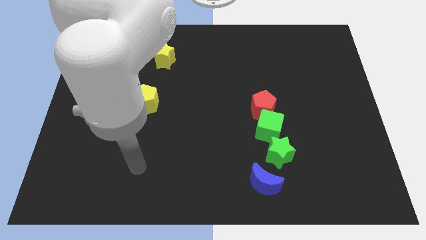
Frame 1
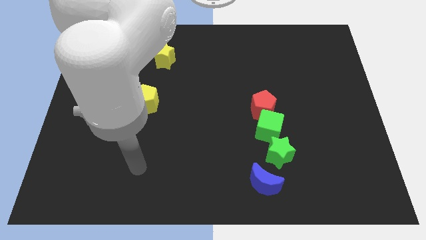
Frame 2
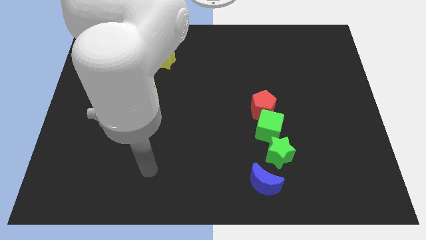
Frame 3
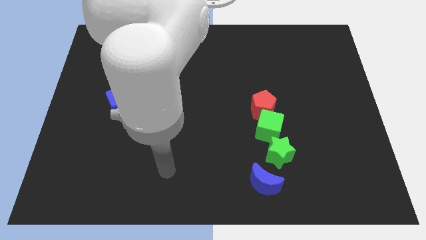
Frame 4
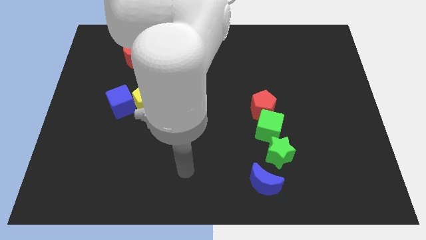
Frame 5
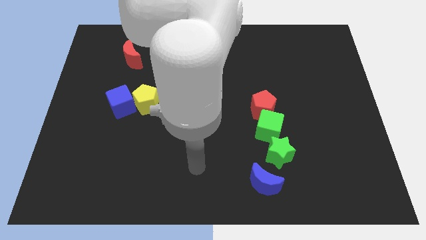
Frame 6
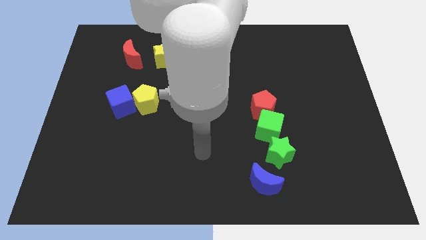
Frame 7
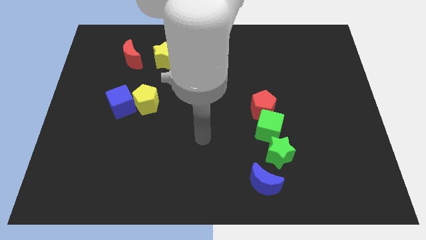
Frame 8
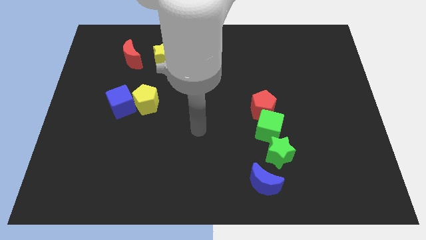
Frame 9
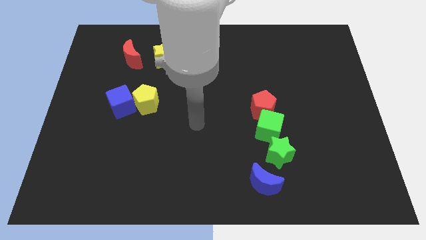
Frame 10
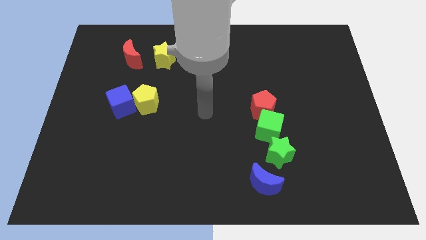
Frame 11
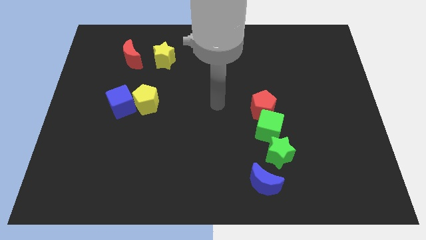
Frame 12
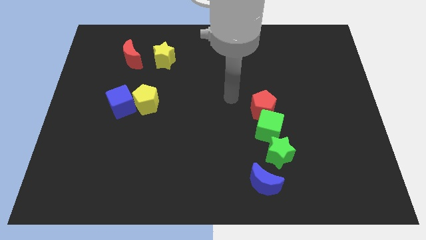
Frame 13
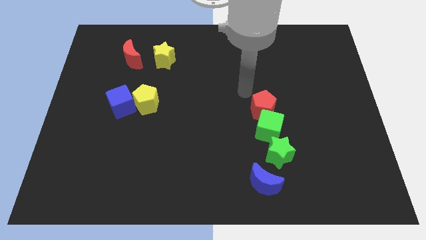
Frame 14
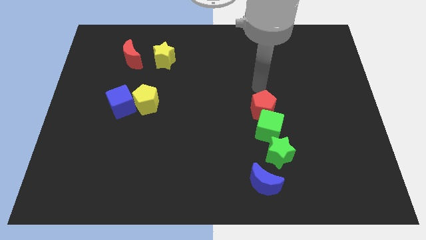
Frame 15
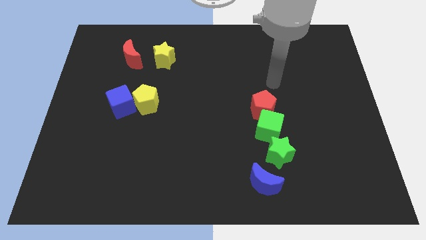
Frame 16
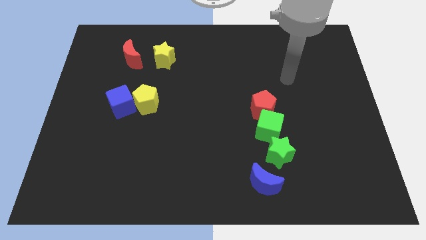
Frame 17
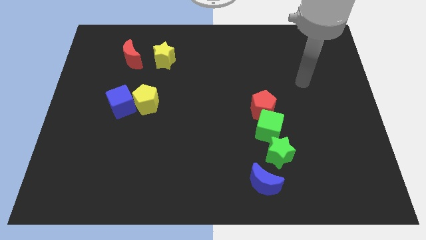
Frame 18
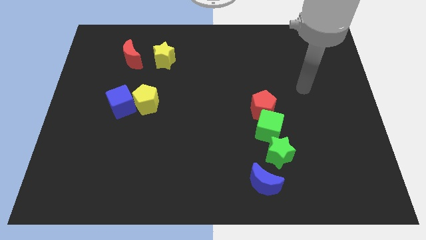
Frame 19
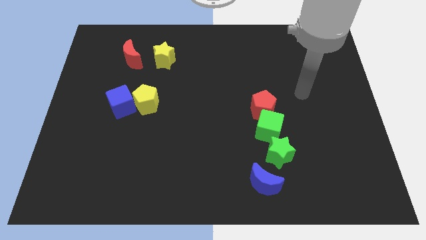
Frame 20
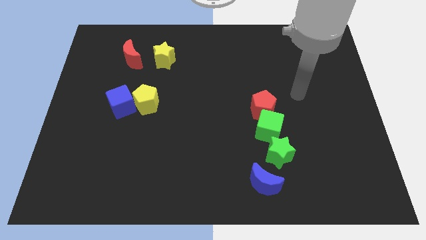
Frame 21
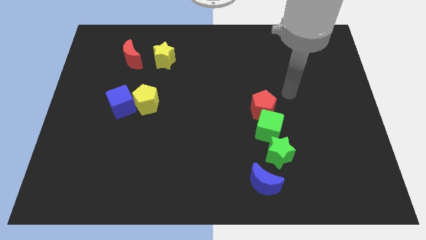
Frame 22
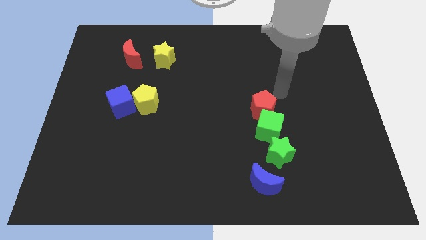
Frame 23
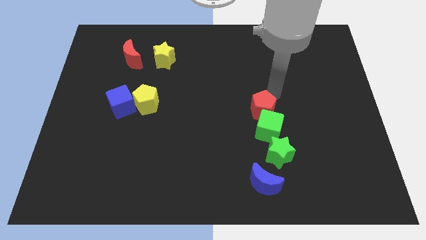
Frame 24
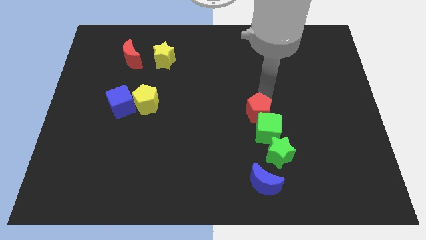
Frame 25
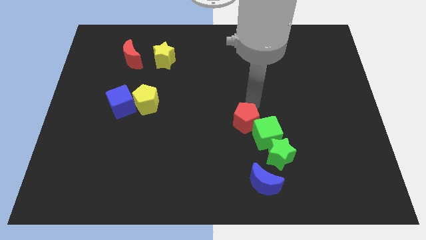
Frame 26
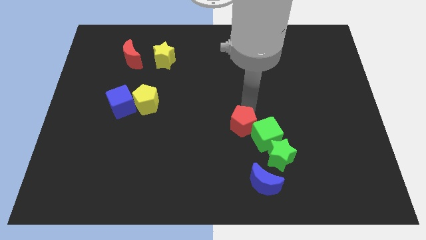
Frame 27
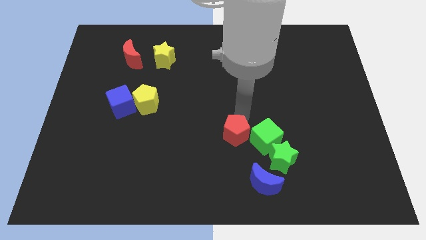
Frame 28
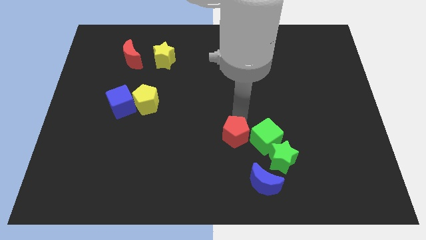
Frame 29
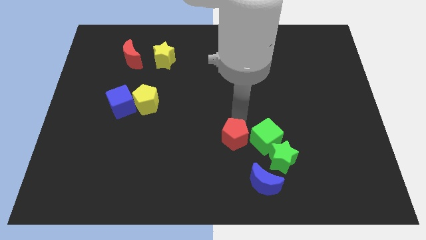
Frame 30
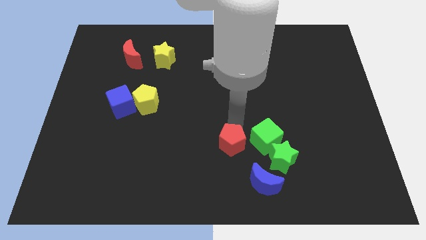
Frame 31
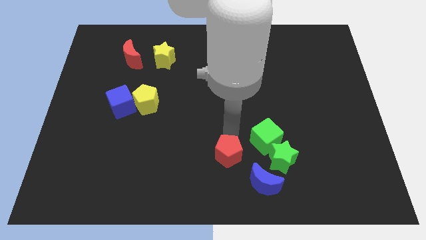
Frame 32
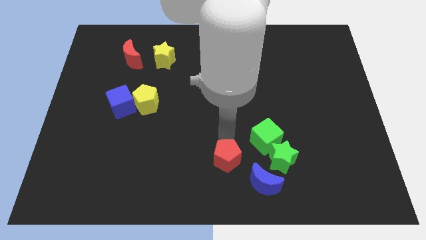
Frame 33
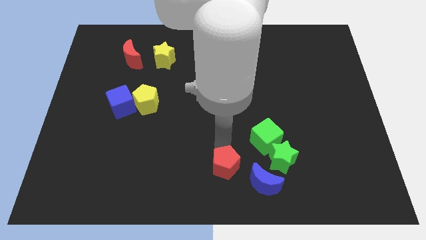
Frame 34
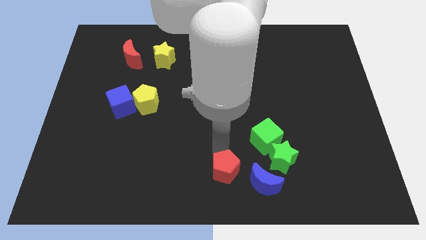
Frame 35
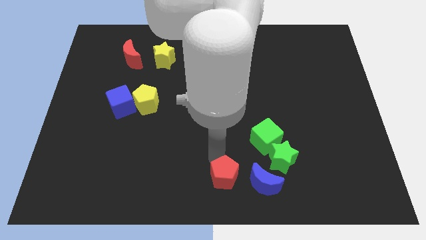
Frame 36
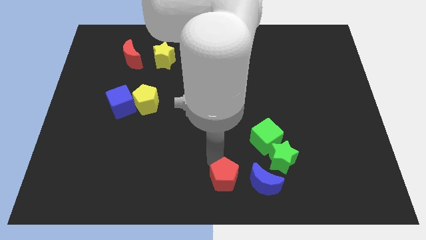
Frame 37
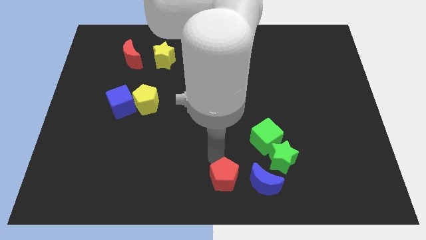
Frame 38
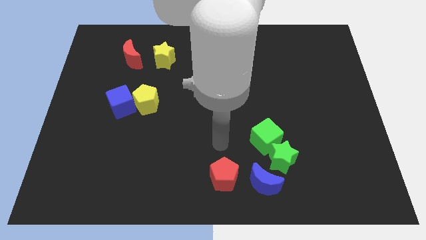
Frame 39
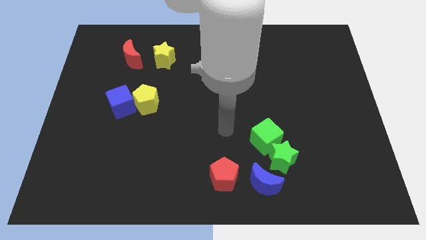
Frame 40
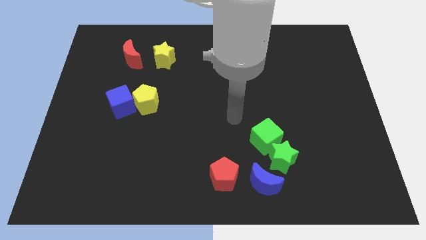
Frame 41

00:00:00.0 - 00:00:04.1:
push the red pentagon towards the bottom center

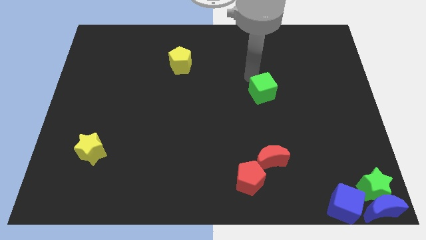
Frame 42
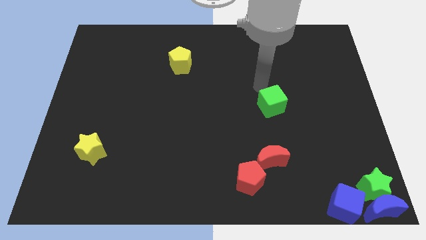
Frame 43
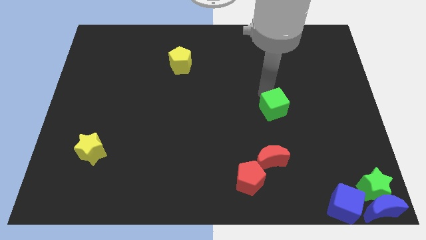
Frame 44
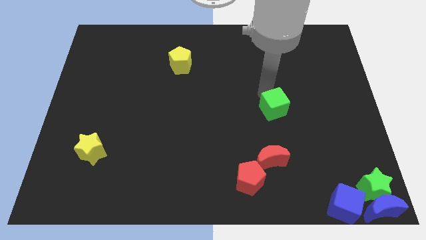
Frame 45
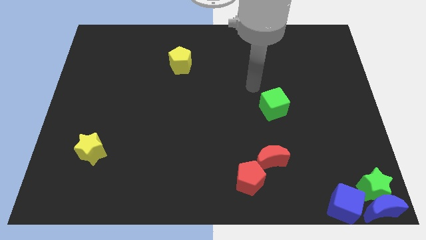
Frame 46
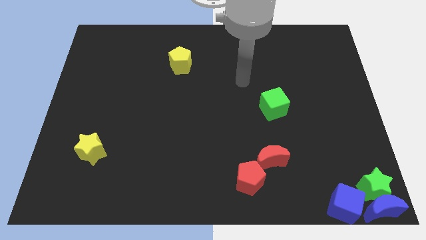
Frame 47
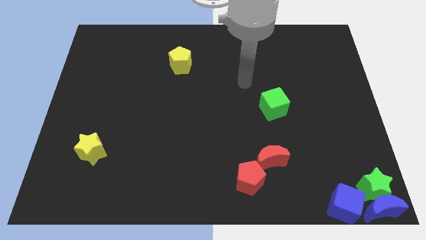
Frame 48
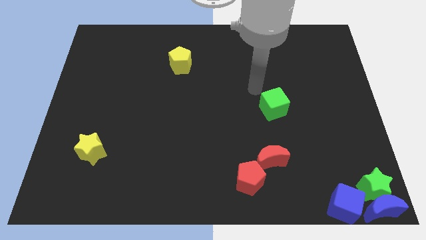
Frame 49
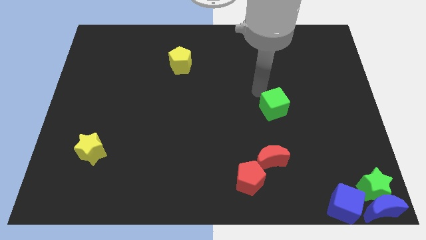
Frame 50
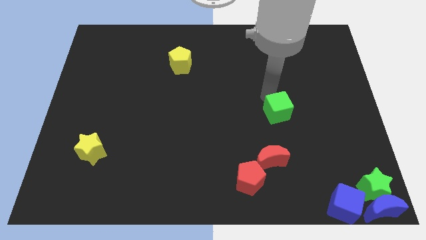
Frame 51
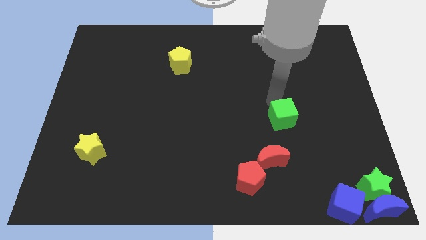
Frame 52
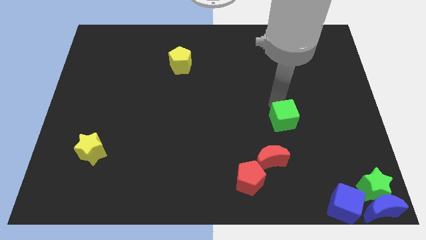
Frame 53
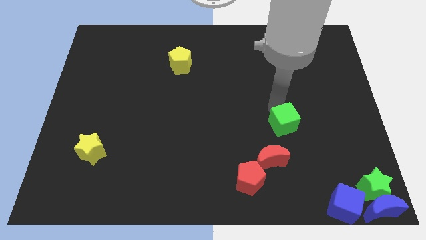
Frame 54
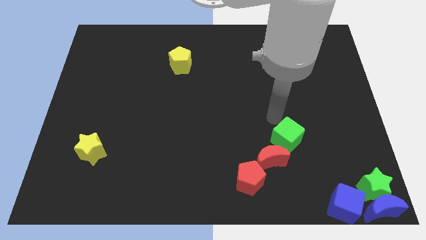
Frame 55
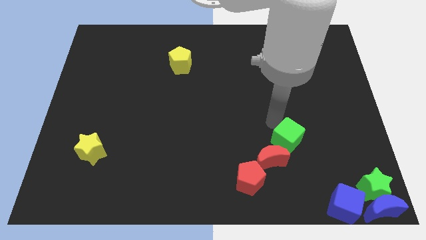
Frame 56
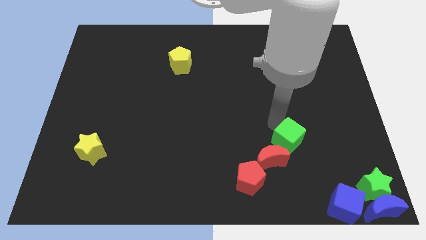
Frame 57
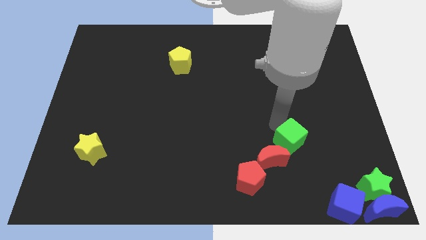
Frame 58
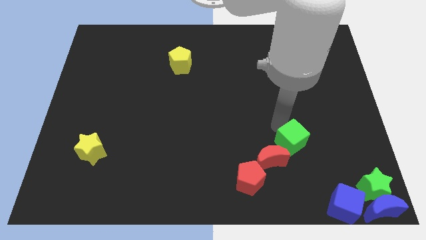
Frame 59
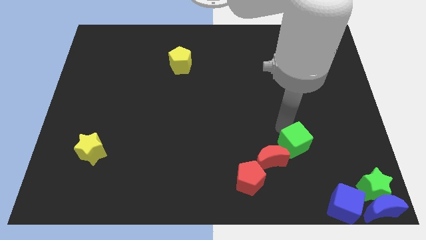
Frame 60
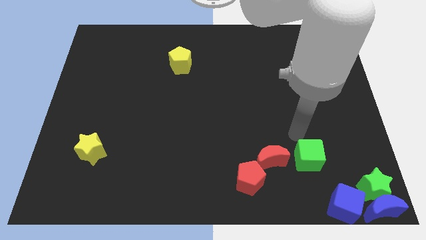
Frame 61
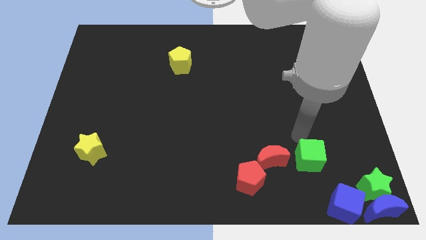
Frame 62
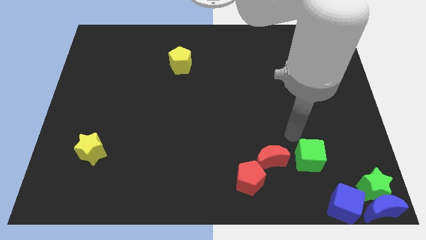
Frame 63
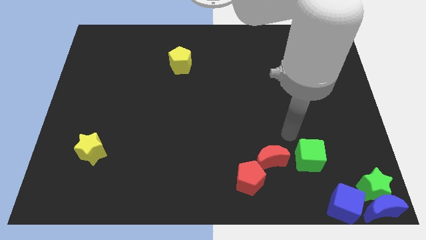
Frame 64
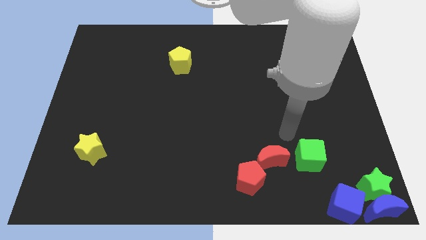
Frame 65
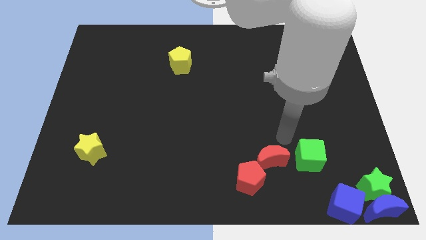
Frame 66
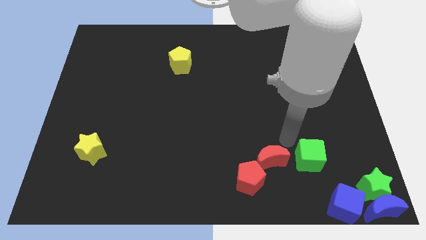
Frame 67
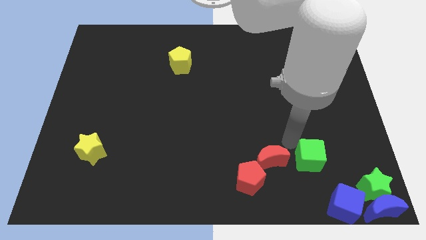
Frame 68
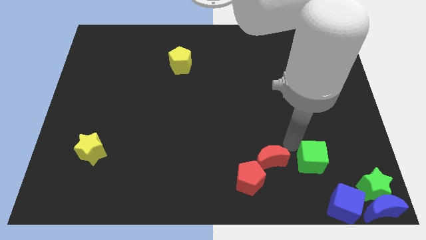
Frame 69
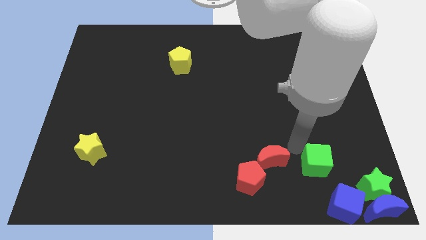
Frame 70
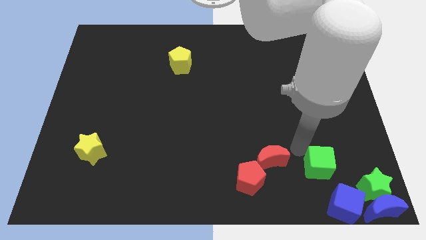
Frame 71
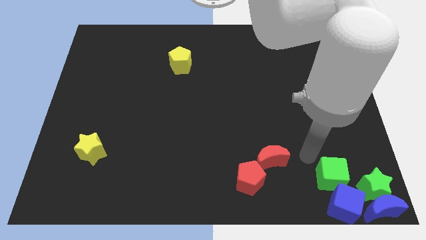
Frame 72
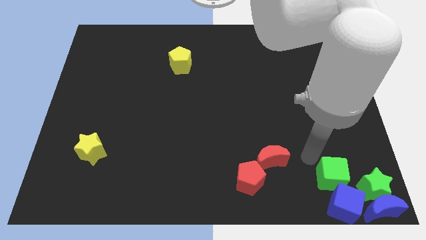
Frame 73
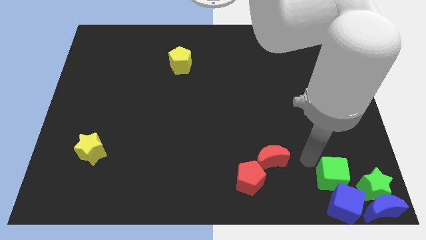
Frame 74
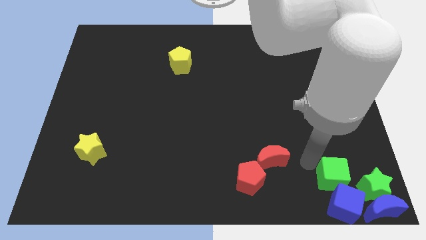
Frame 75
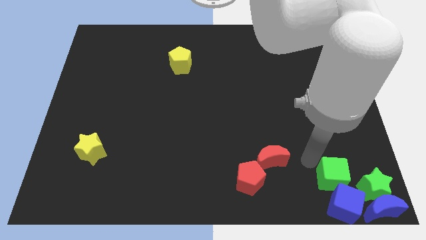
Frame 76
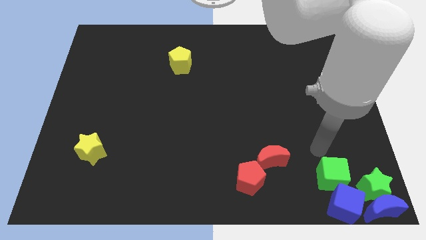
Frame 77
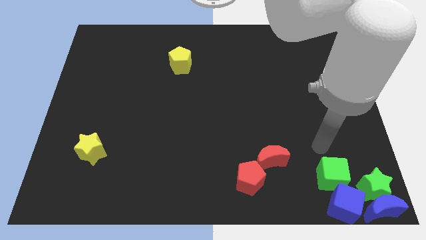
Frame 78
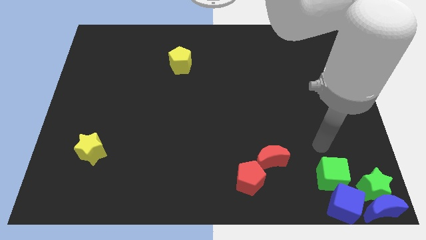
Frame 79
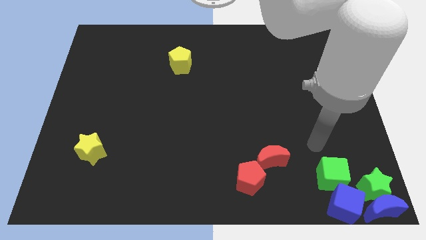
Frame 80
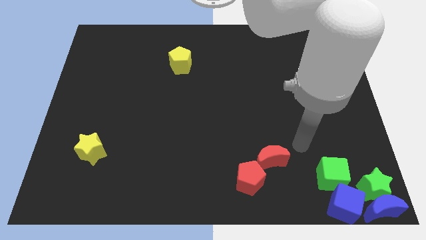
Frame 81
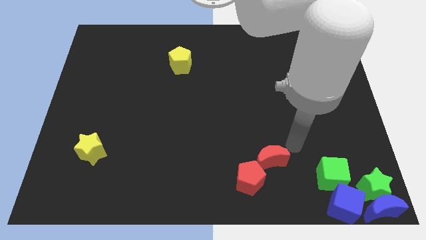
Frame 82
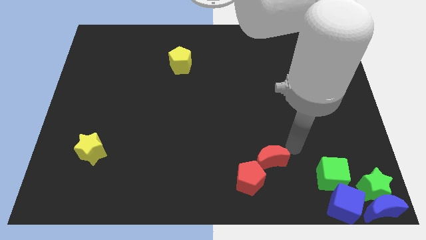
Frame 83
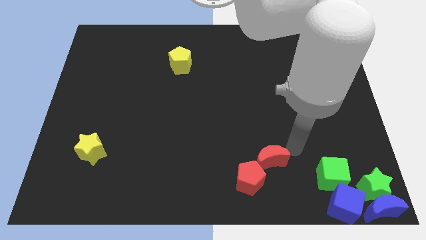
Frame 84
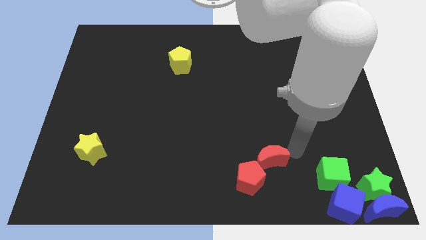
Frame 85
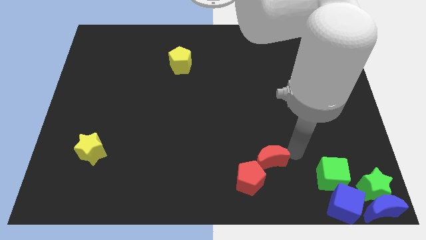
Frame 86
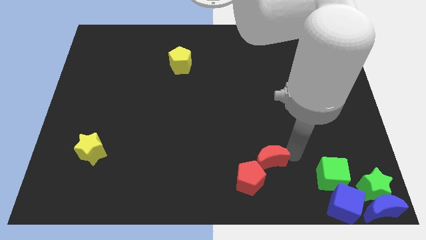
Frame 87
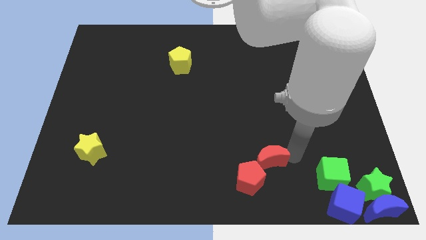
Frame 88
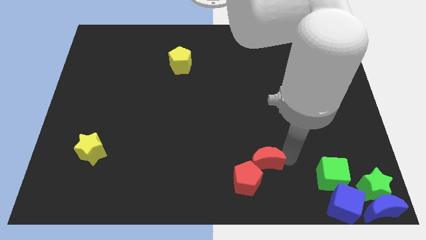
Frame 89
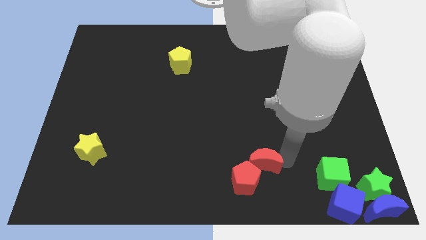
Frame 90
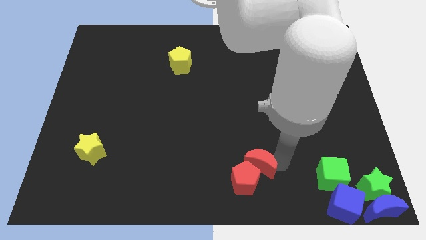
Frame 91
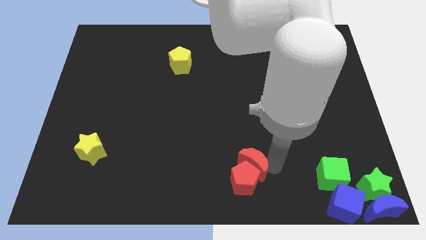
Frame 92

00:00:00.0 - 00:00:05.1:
slide the green cube into the group of blocks towards the bottom right corner of the board
